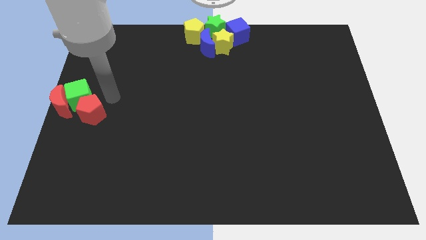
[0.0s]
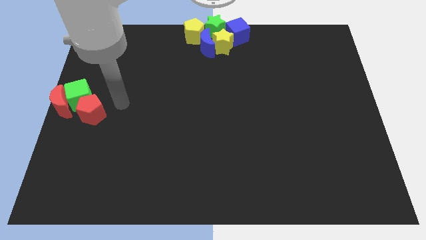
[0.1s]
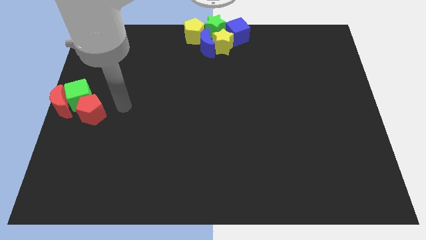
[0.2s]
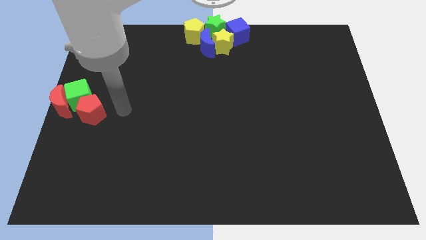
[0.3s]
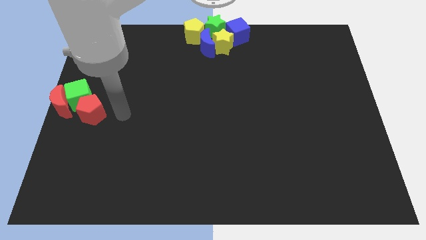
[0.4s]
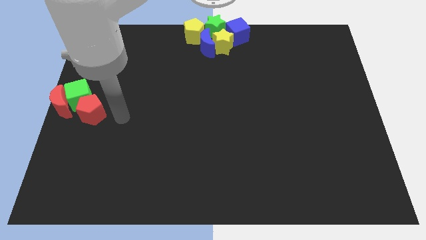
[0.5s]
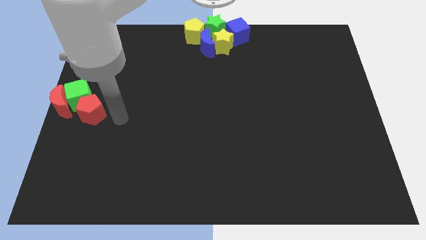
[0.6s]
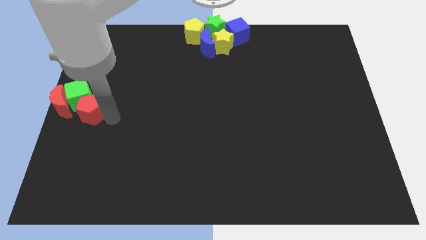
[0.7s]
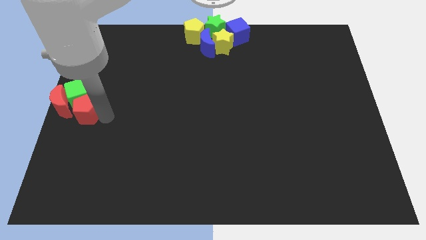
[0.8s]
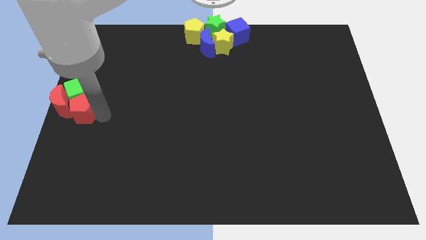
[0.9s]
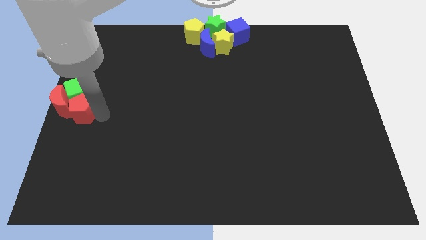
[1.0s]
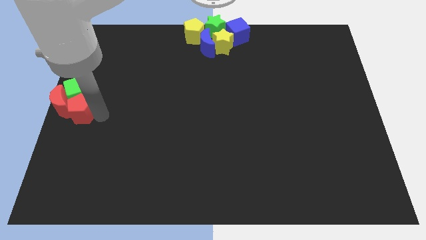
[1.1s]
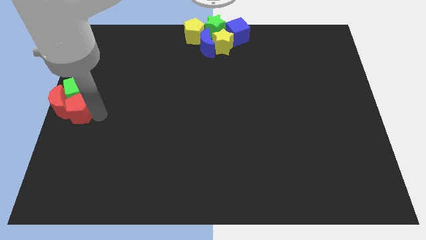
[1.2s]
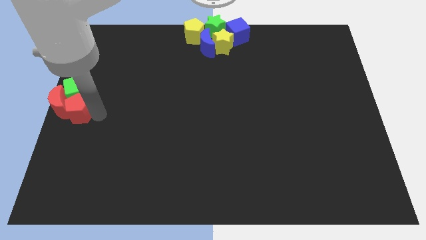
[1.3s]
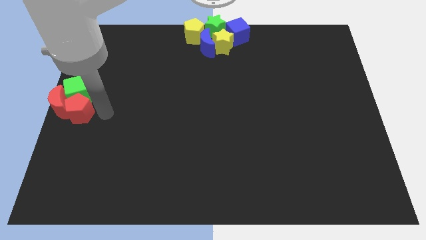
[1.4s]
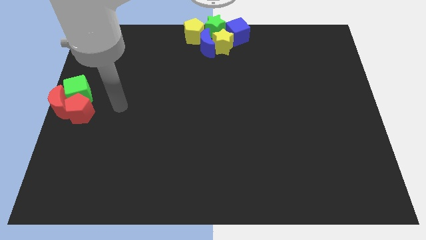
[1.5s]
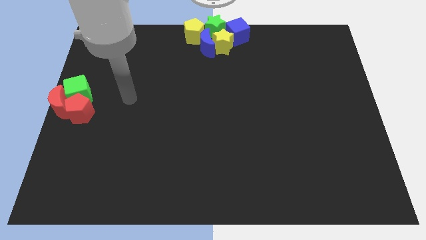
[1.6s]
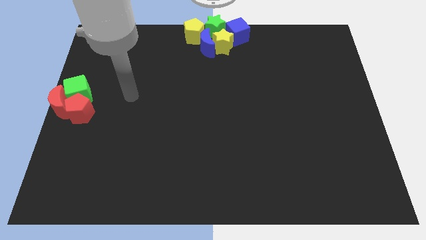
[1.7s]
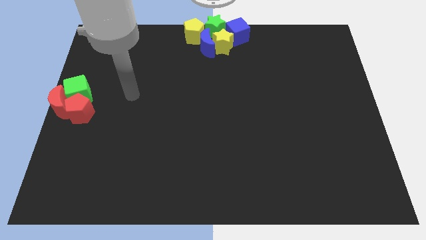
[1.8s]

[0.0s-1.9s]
adjust the green cubered moon and red pentagon at the center left of the board

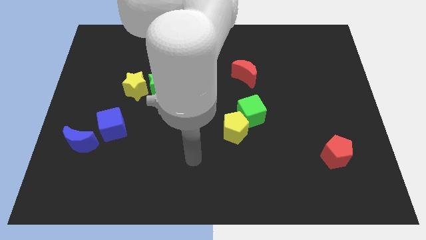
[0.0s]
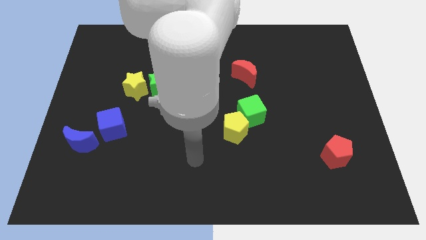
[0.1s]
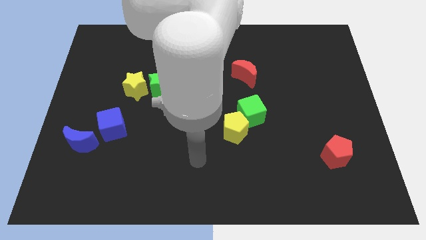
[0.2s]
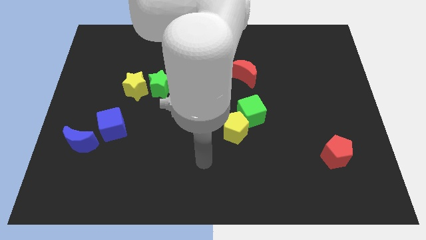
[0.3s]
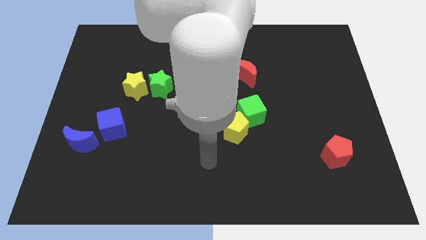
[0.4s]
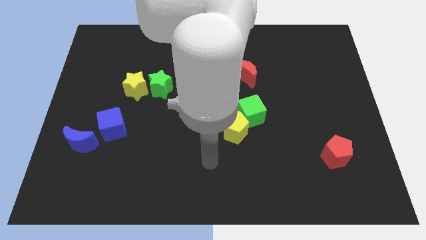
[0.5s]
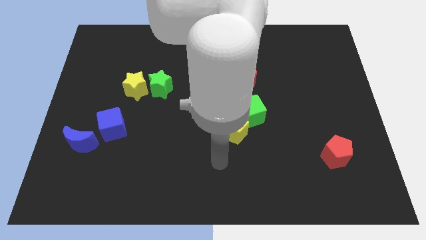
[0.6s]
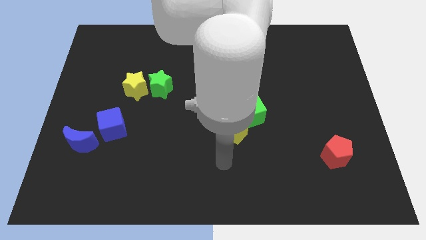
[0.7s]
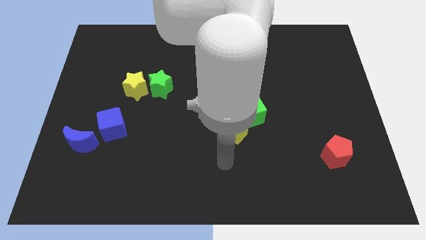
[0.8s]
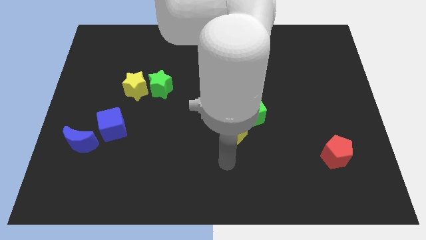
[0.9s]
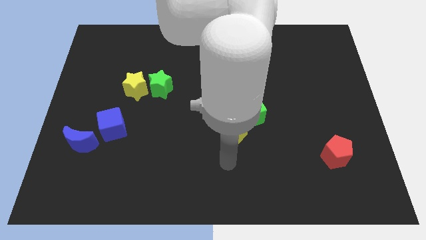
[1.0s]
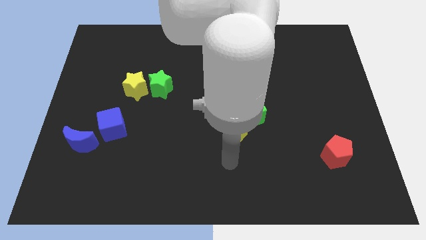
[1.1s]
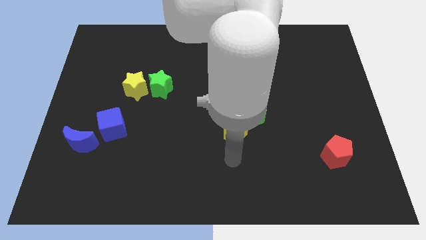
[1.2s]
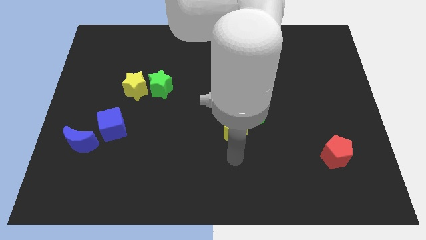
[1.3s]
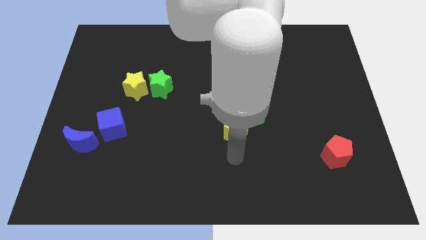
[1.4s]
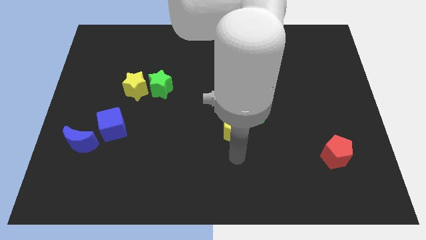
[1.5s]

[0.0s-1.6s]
move your hand to the bottom side of the yellow pentagon

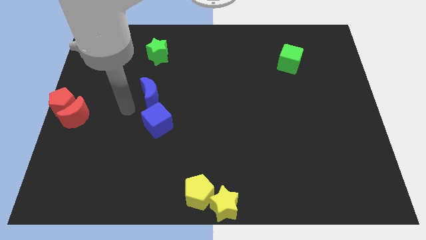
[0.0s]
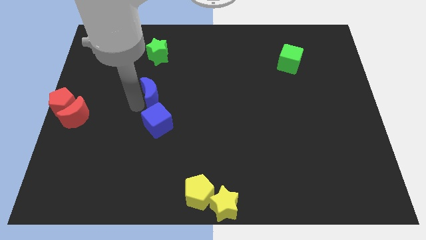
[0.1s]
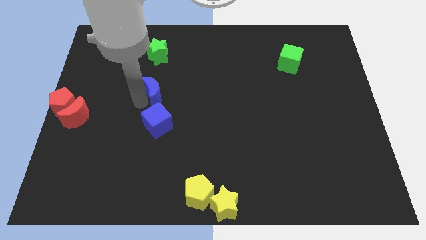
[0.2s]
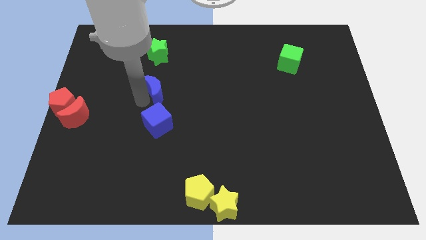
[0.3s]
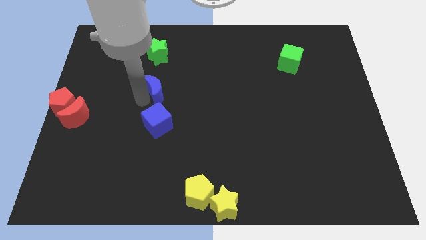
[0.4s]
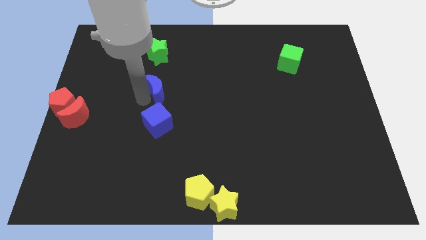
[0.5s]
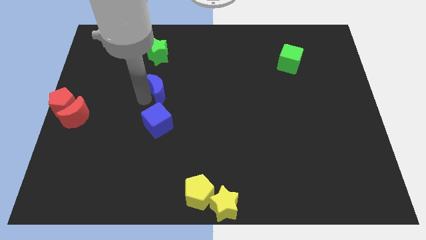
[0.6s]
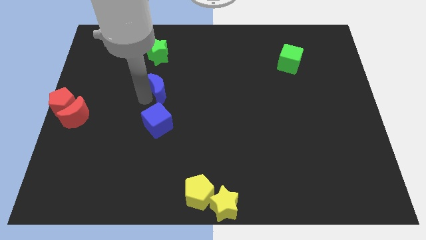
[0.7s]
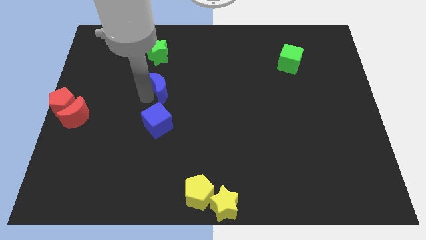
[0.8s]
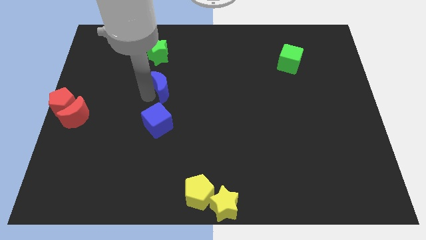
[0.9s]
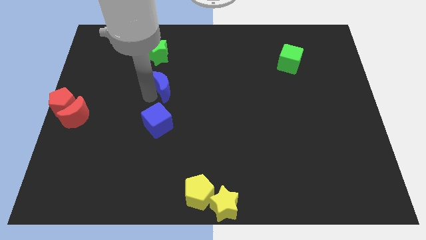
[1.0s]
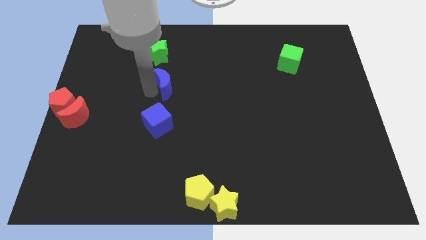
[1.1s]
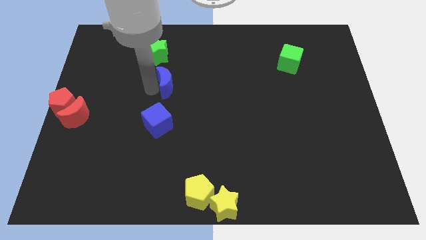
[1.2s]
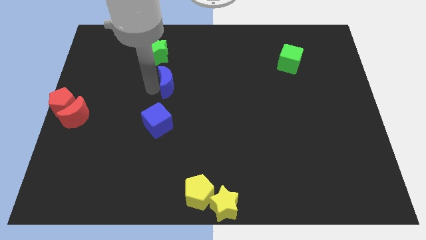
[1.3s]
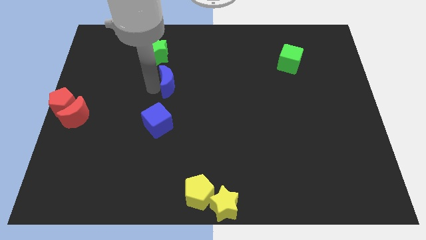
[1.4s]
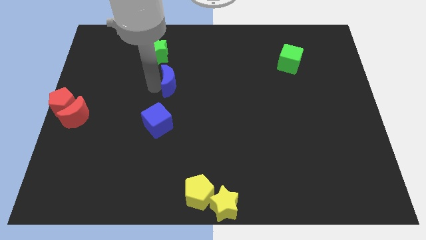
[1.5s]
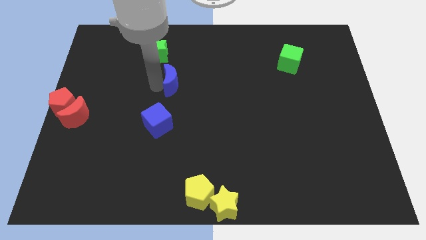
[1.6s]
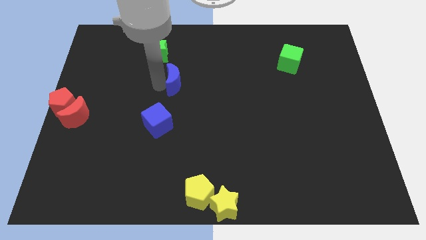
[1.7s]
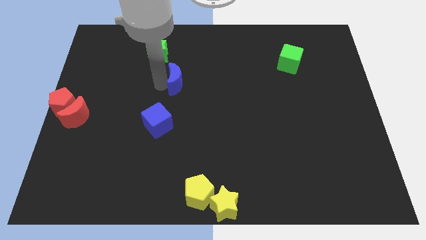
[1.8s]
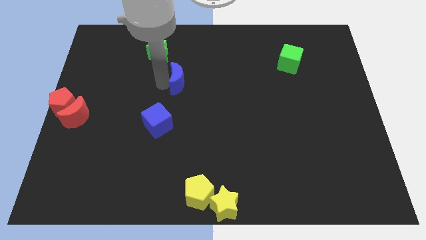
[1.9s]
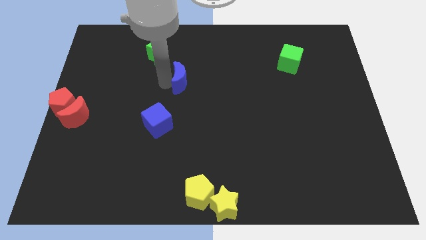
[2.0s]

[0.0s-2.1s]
move the blue moon away from the blue cube

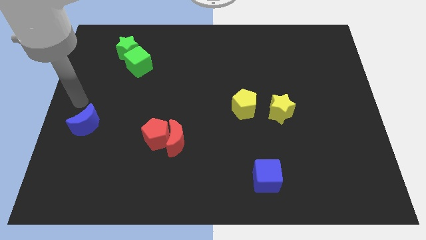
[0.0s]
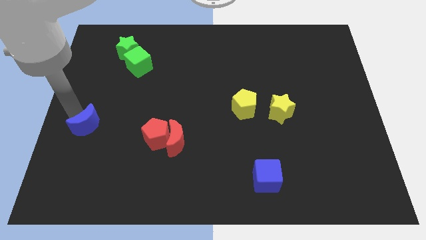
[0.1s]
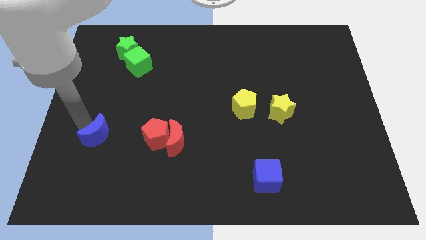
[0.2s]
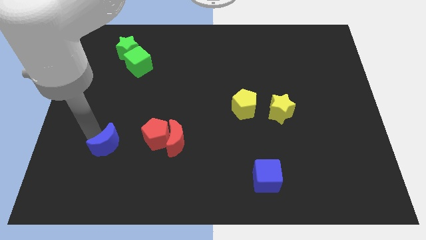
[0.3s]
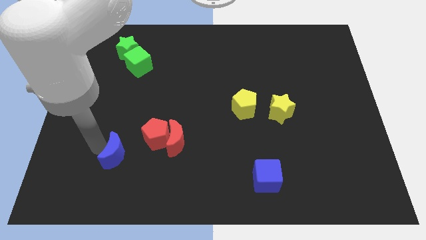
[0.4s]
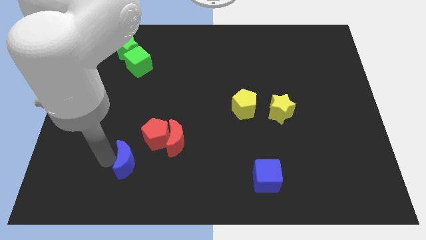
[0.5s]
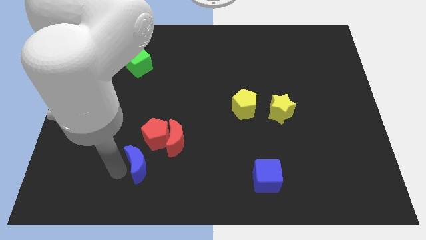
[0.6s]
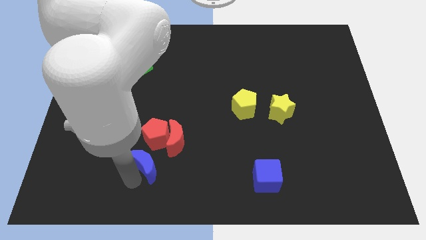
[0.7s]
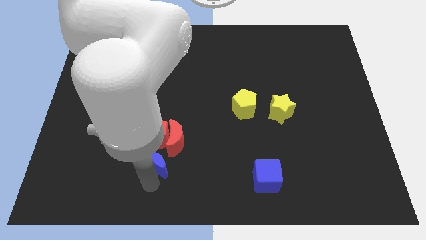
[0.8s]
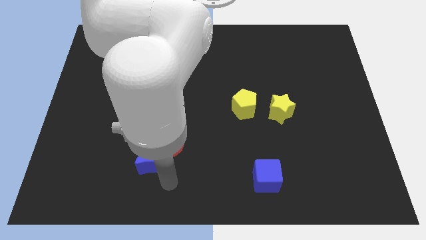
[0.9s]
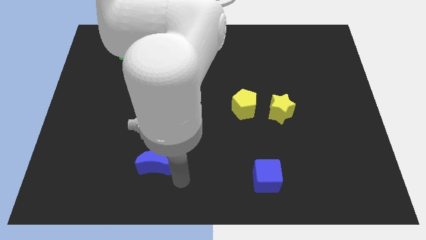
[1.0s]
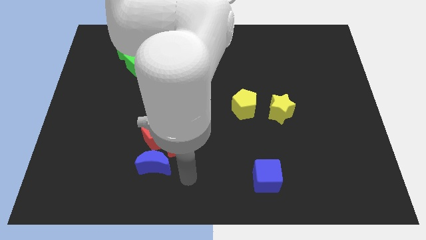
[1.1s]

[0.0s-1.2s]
push the blue moon to the bottom side of the red pentagon

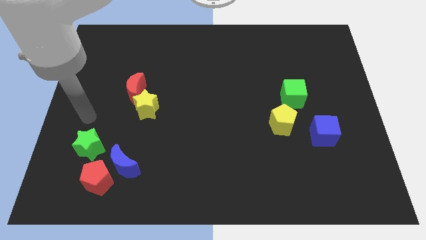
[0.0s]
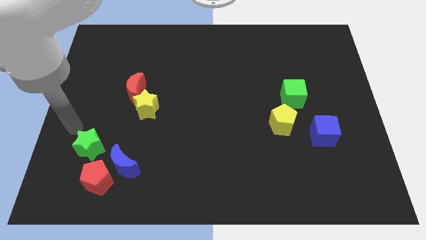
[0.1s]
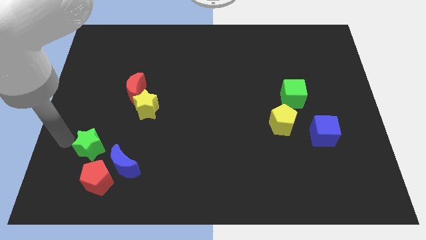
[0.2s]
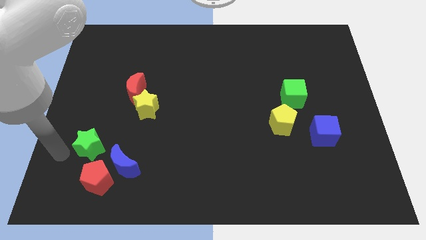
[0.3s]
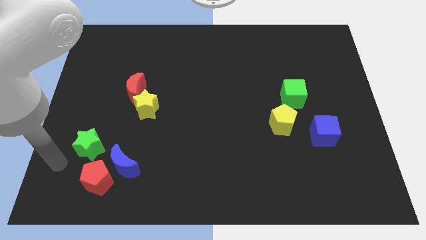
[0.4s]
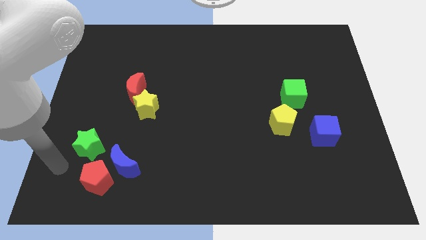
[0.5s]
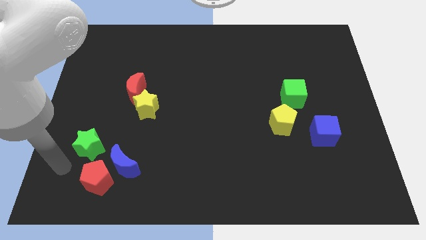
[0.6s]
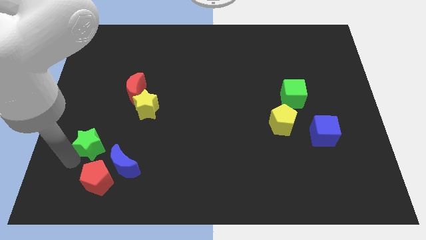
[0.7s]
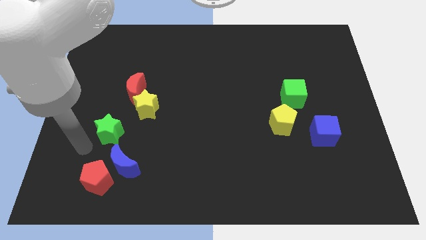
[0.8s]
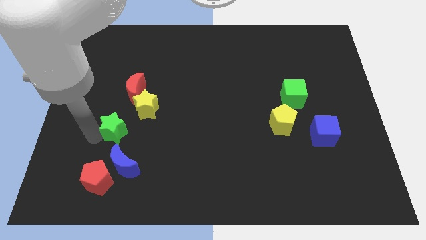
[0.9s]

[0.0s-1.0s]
move the green star away from the red pentagon

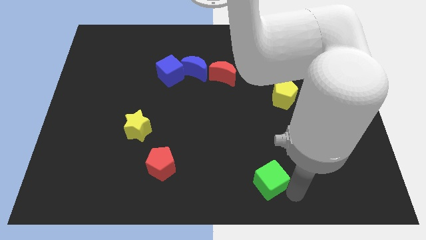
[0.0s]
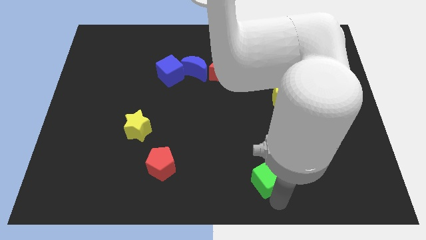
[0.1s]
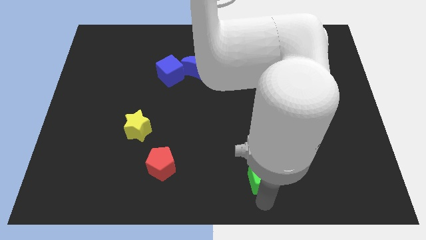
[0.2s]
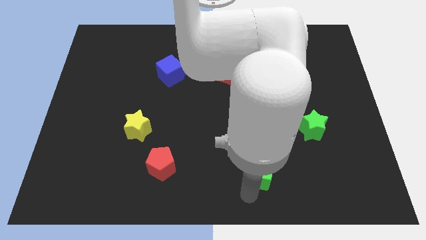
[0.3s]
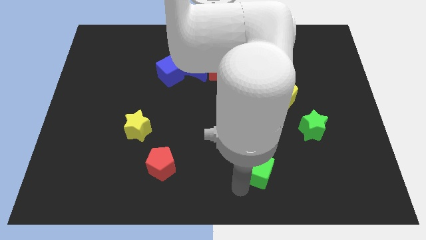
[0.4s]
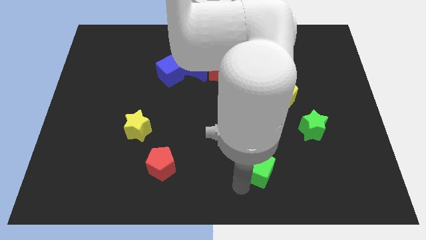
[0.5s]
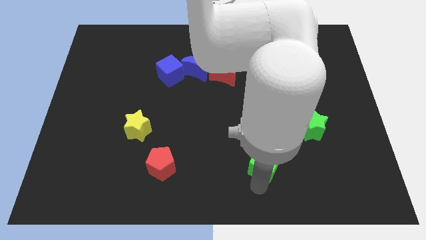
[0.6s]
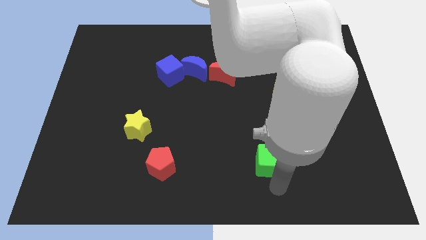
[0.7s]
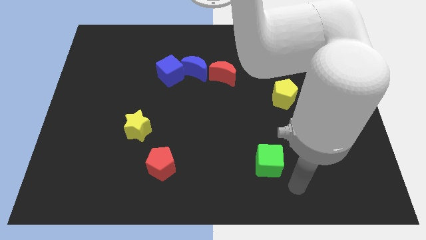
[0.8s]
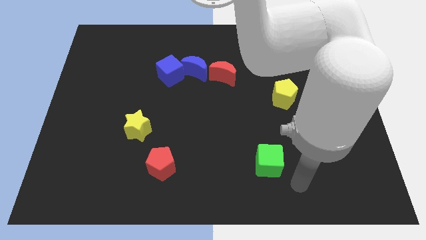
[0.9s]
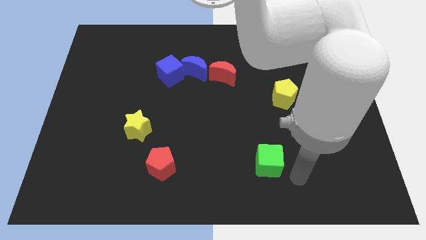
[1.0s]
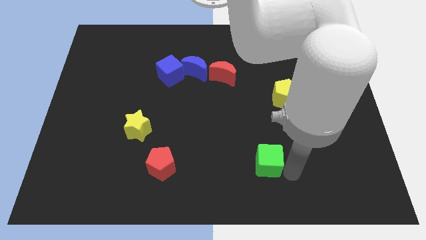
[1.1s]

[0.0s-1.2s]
push the green cube upwards
